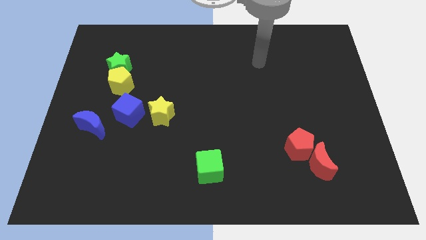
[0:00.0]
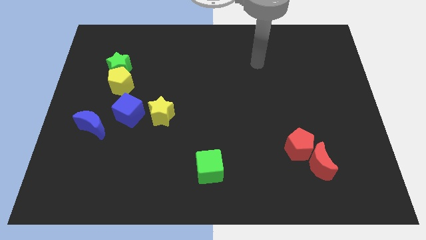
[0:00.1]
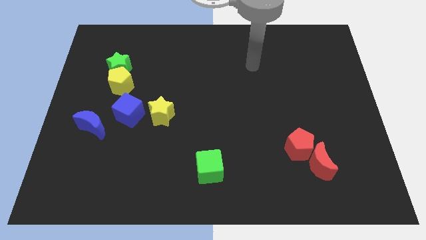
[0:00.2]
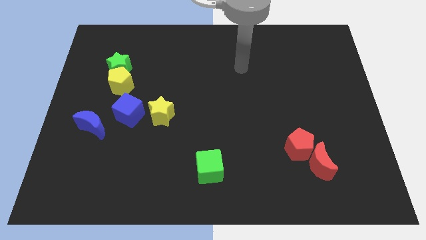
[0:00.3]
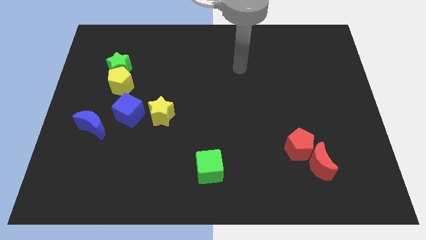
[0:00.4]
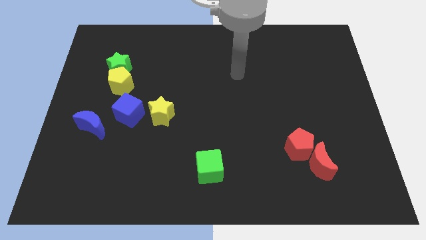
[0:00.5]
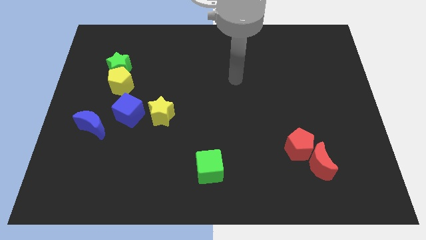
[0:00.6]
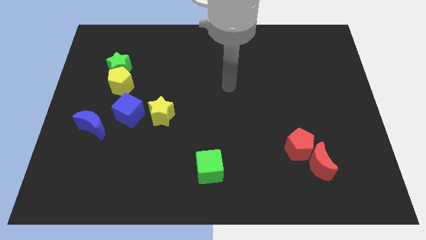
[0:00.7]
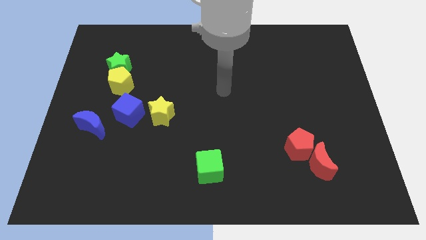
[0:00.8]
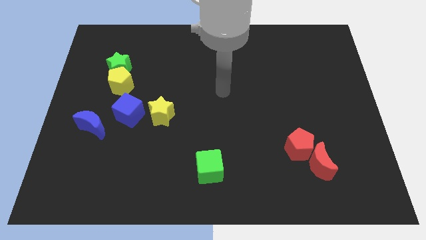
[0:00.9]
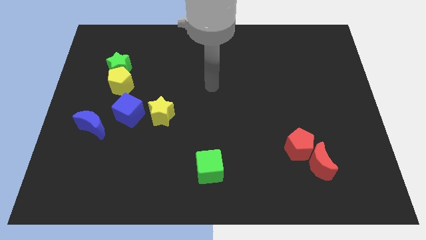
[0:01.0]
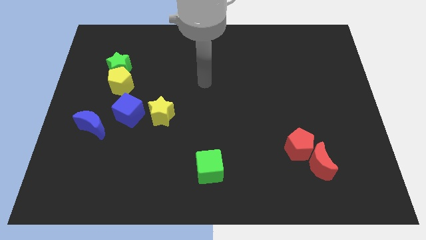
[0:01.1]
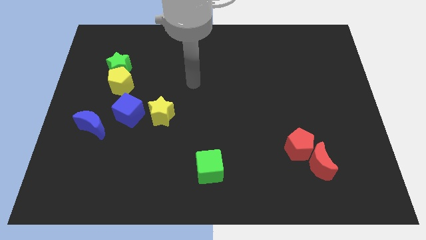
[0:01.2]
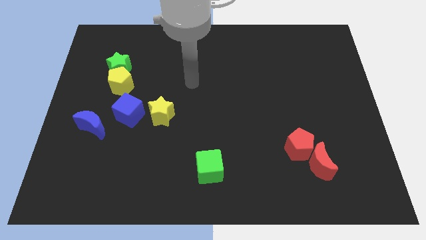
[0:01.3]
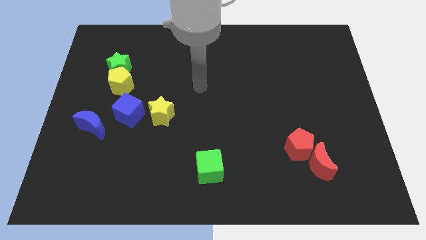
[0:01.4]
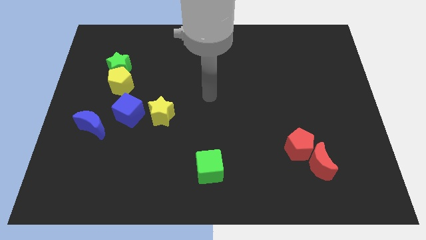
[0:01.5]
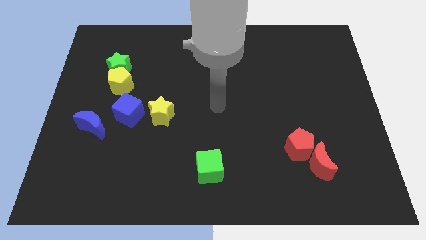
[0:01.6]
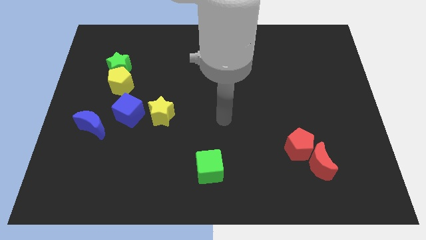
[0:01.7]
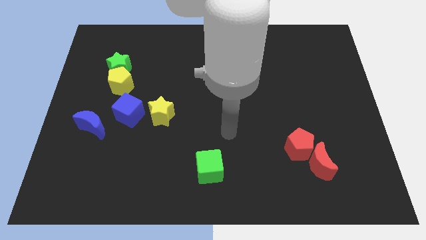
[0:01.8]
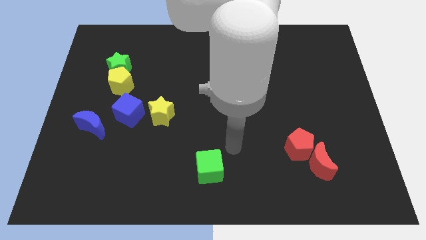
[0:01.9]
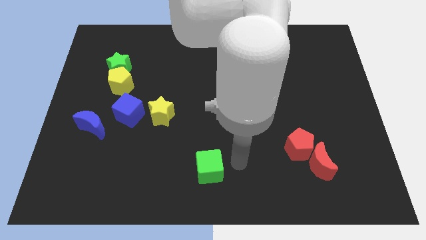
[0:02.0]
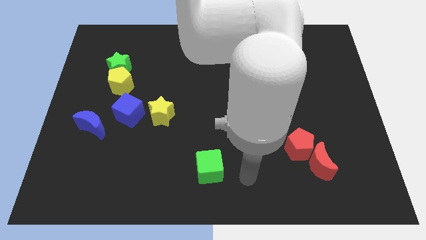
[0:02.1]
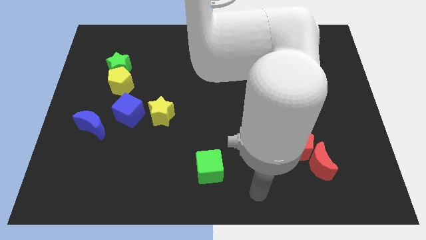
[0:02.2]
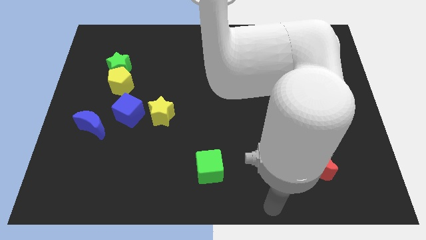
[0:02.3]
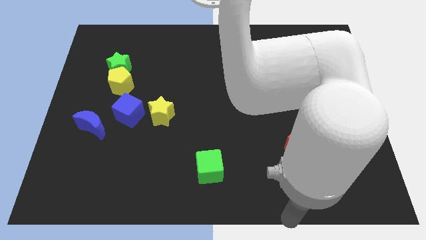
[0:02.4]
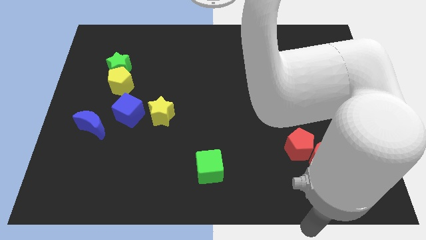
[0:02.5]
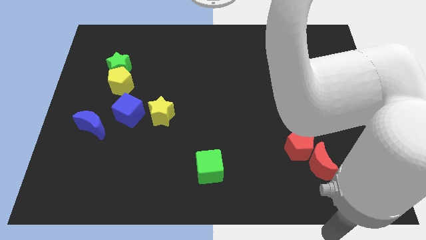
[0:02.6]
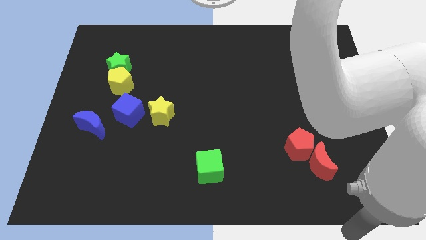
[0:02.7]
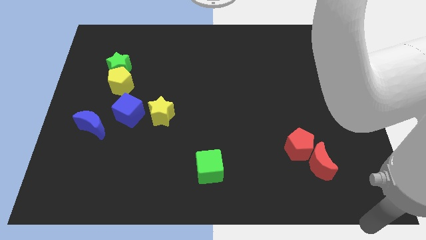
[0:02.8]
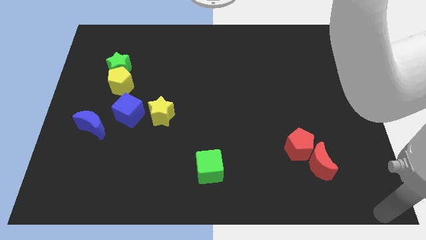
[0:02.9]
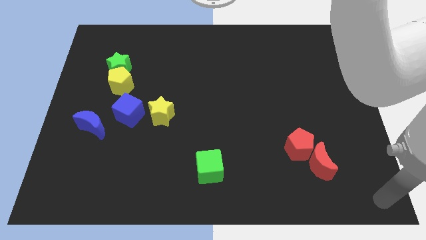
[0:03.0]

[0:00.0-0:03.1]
move the arm towards the bottom right corner of the board

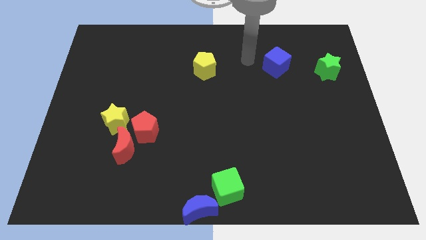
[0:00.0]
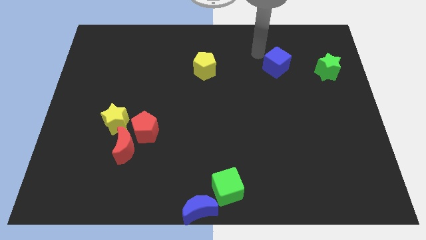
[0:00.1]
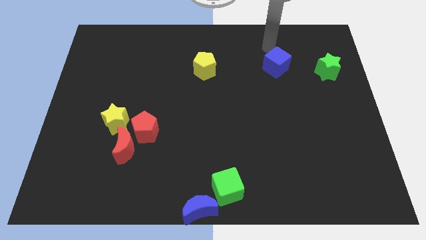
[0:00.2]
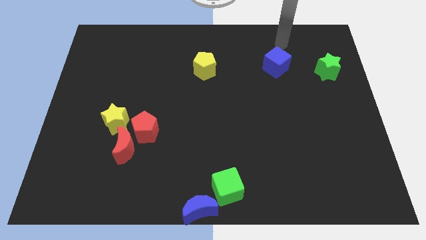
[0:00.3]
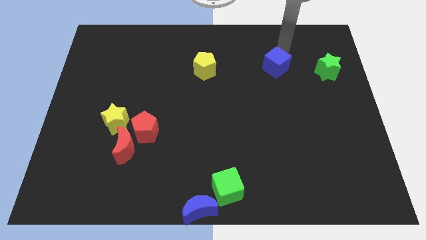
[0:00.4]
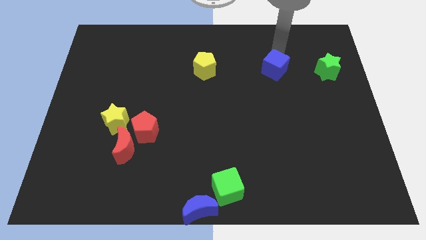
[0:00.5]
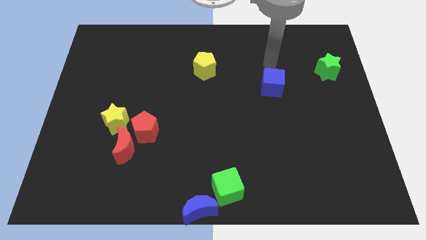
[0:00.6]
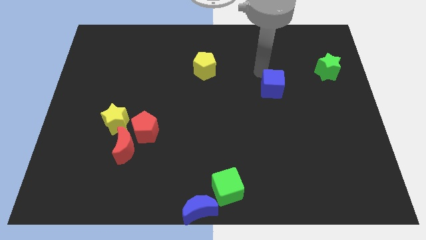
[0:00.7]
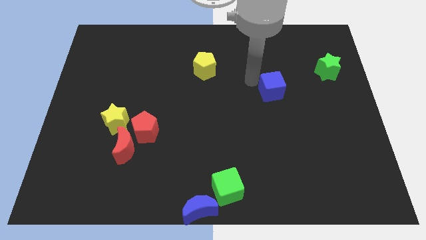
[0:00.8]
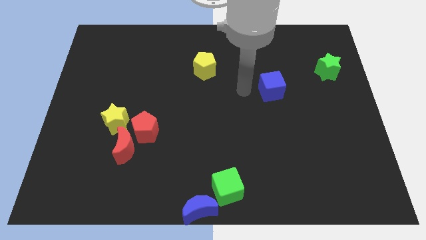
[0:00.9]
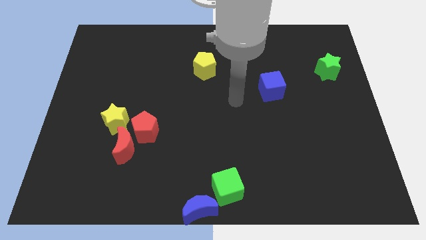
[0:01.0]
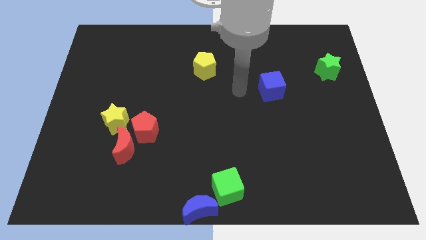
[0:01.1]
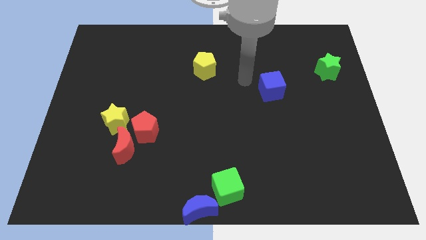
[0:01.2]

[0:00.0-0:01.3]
push the blue cube downwards slightly

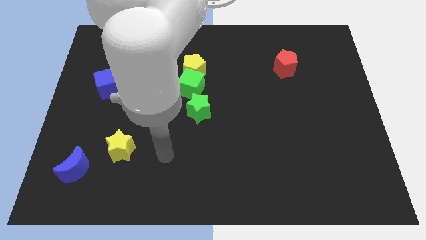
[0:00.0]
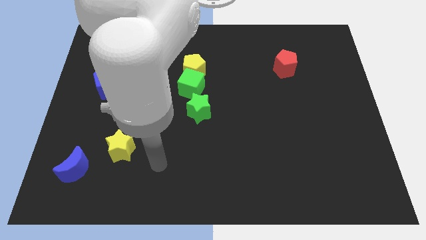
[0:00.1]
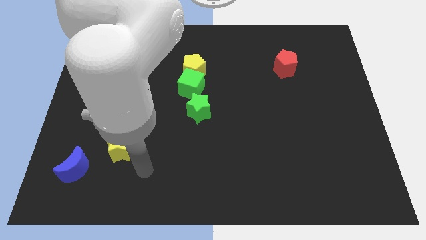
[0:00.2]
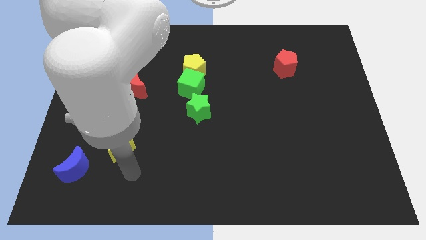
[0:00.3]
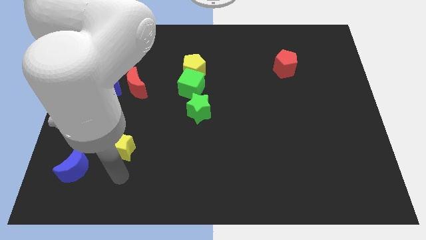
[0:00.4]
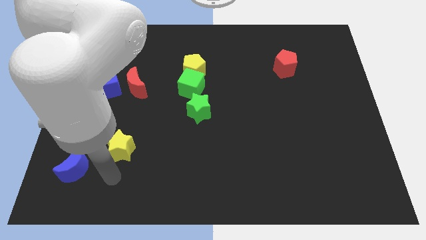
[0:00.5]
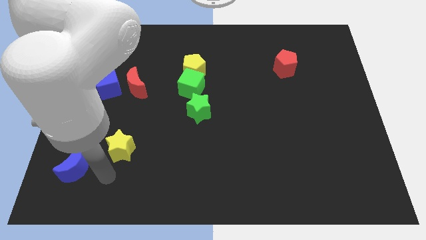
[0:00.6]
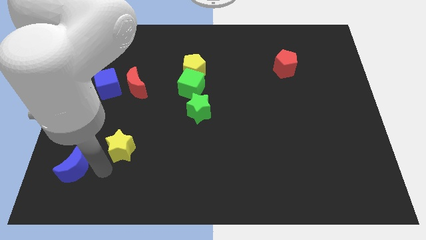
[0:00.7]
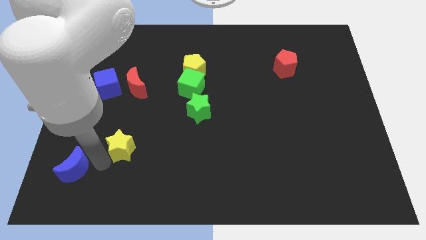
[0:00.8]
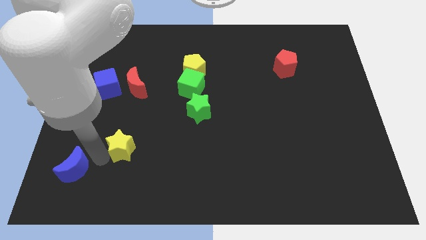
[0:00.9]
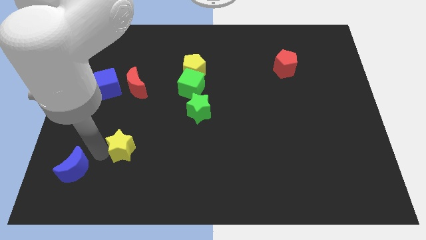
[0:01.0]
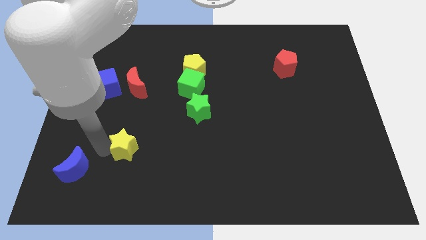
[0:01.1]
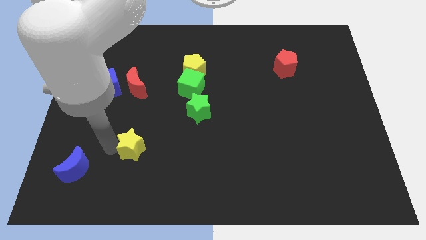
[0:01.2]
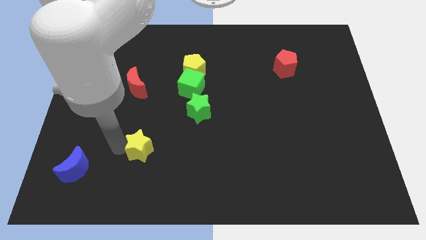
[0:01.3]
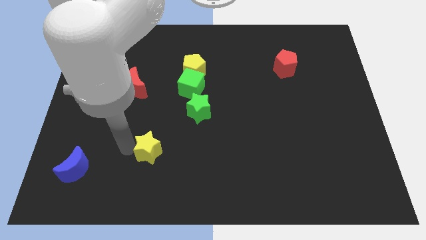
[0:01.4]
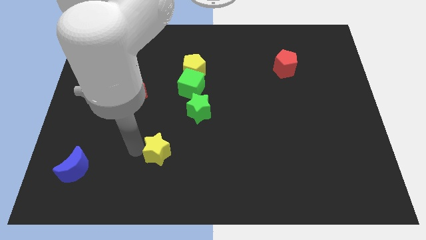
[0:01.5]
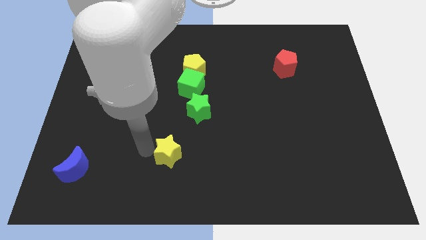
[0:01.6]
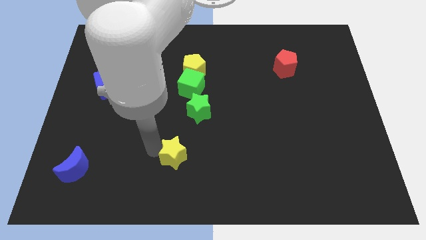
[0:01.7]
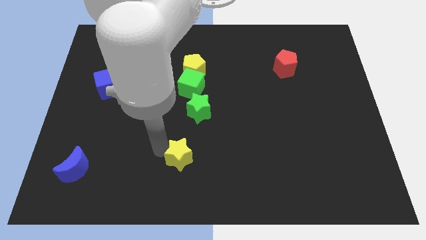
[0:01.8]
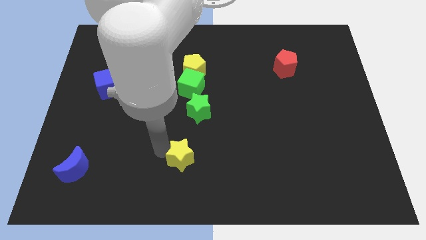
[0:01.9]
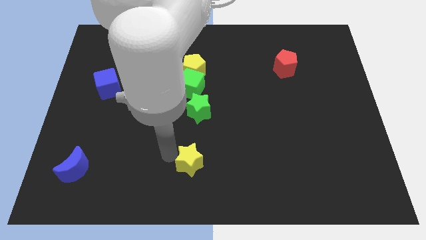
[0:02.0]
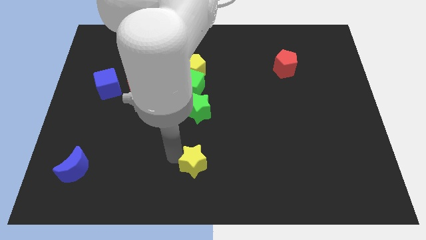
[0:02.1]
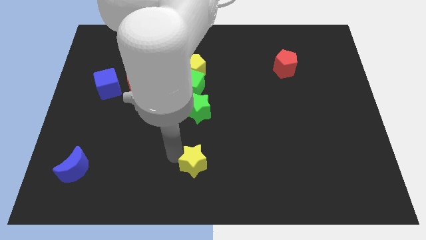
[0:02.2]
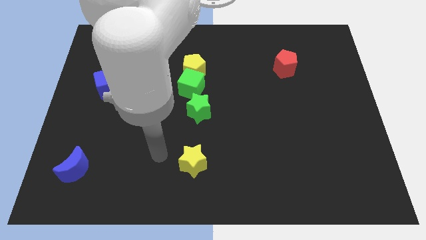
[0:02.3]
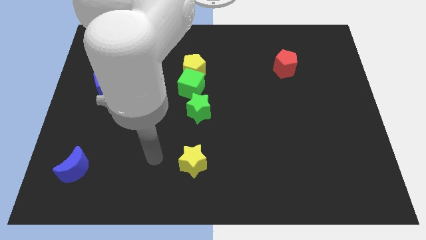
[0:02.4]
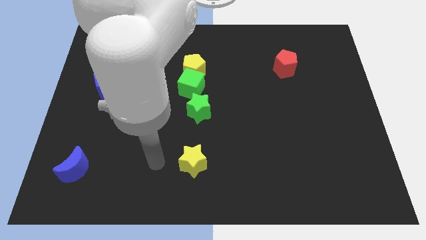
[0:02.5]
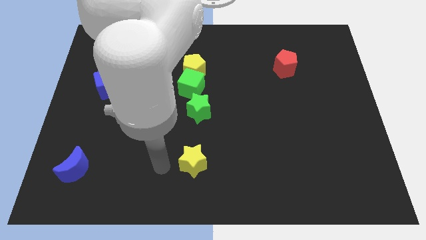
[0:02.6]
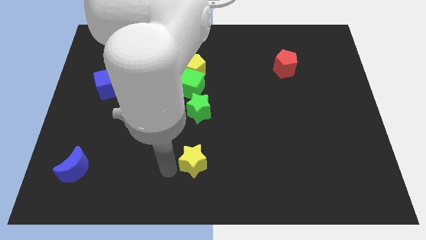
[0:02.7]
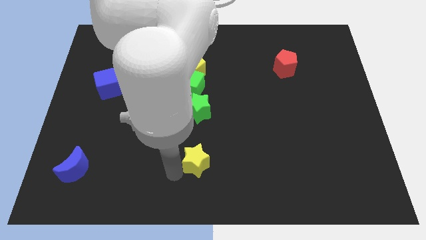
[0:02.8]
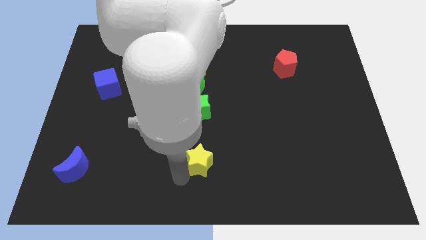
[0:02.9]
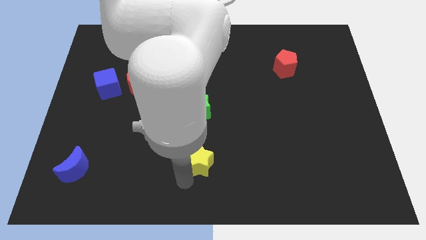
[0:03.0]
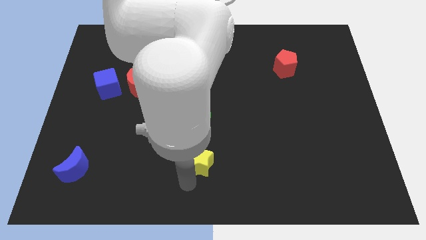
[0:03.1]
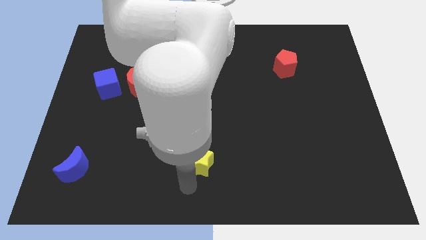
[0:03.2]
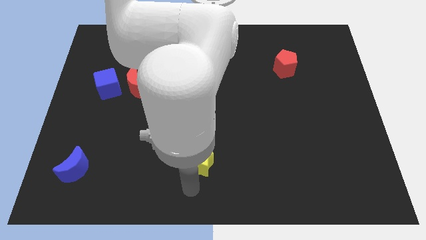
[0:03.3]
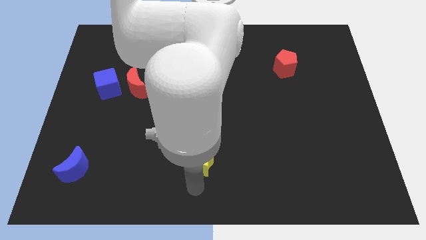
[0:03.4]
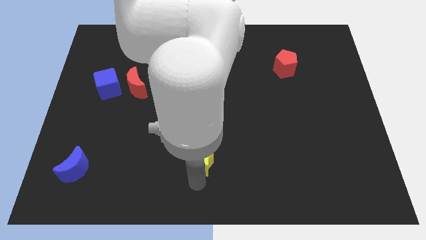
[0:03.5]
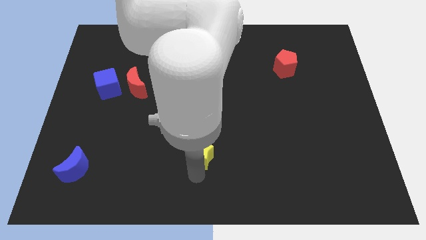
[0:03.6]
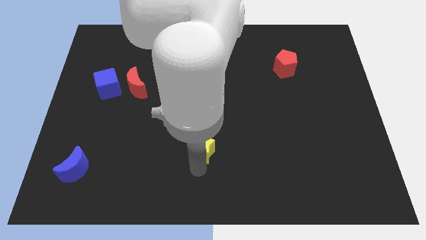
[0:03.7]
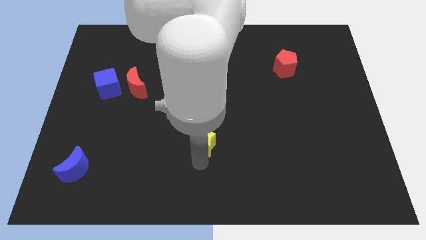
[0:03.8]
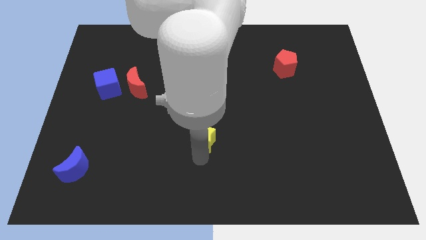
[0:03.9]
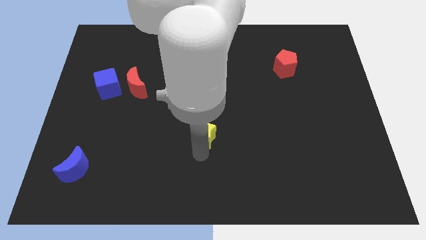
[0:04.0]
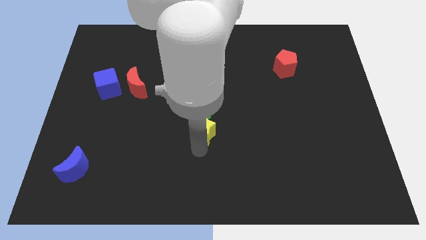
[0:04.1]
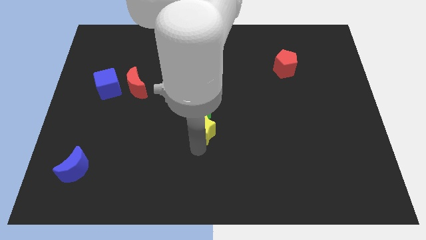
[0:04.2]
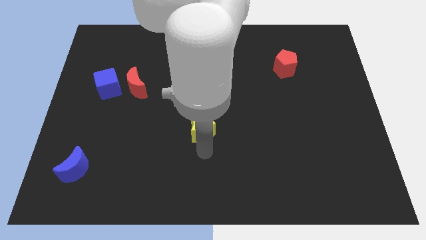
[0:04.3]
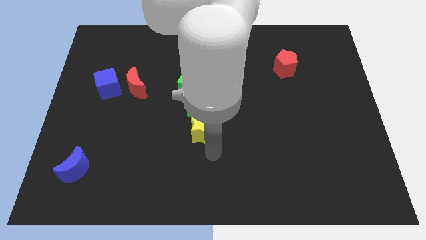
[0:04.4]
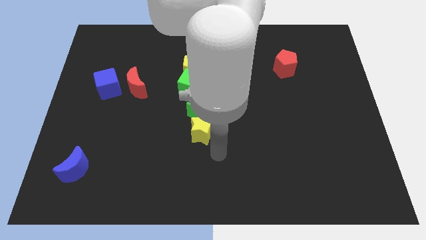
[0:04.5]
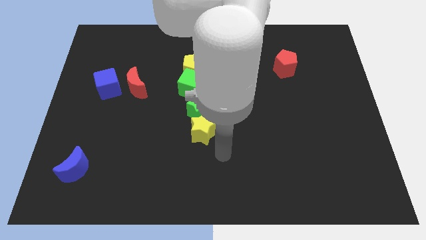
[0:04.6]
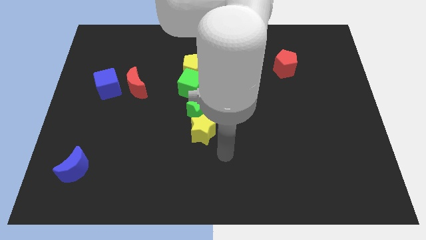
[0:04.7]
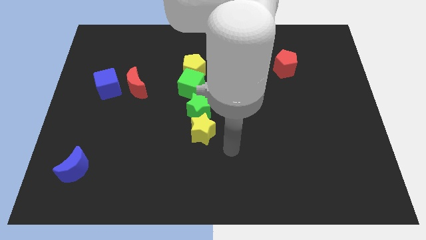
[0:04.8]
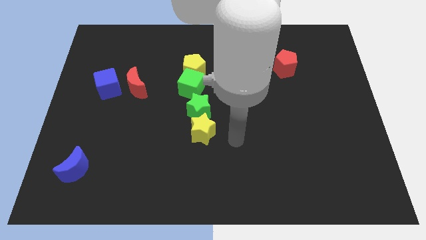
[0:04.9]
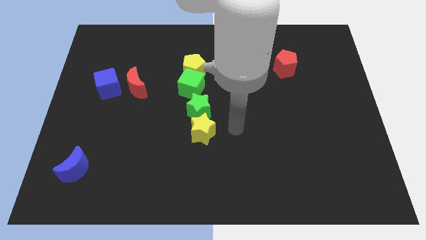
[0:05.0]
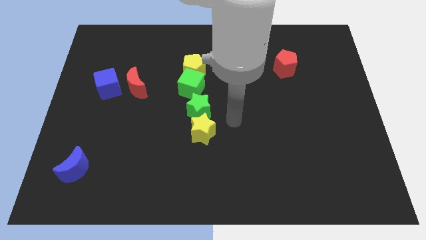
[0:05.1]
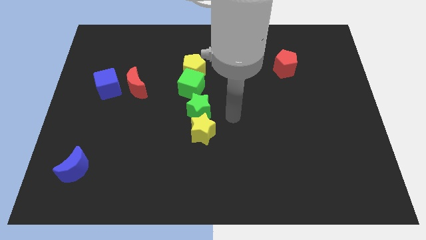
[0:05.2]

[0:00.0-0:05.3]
push the yellow star at the bottom of the green star
